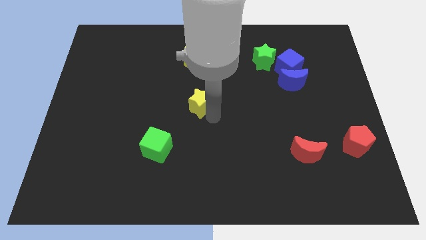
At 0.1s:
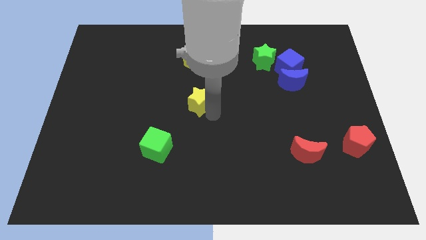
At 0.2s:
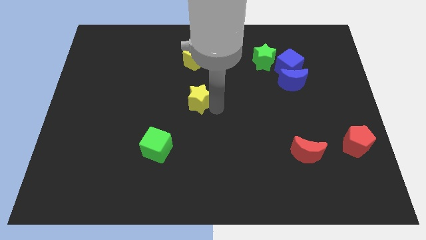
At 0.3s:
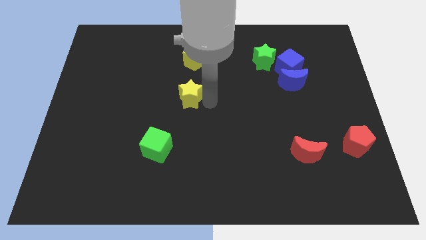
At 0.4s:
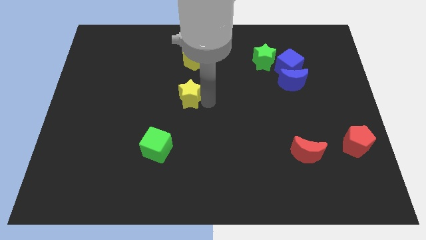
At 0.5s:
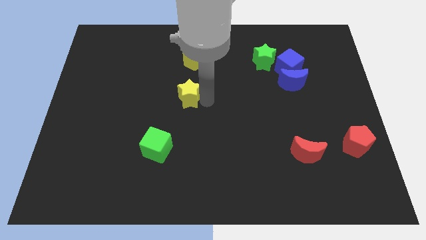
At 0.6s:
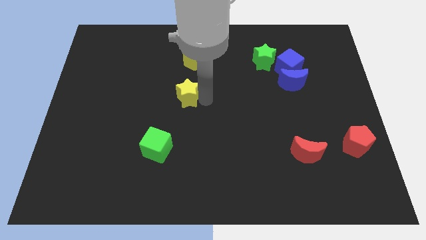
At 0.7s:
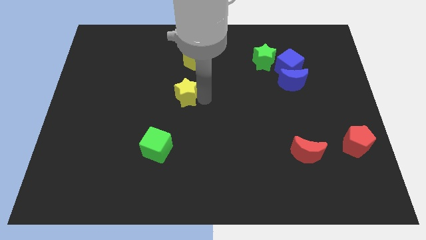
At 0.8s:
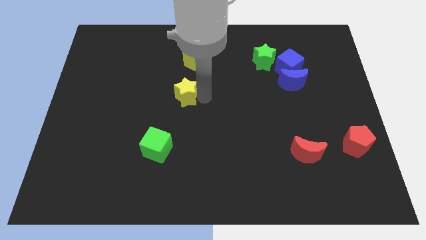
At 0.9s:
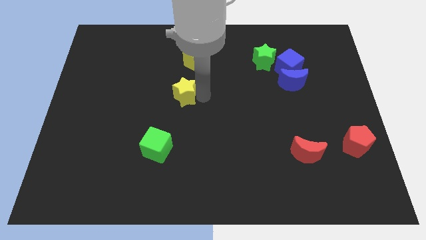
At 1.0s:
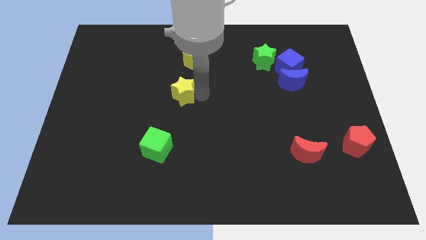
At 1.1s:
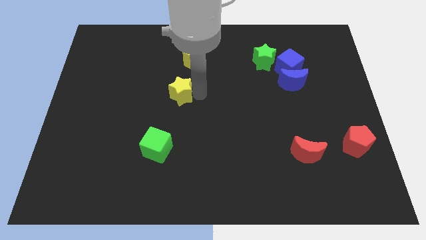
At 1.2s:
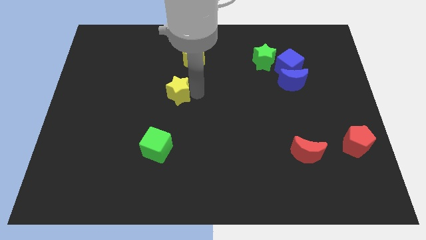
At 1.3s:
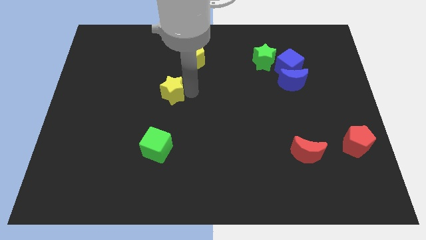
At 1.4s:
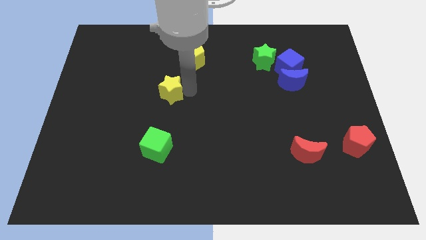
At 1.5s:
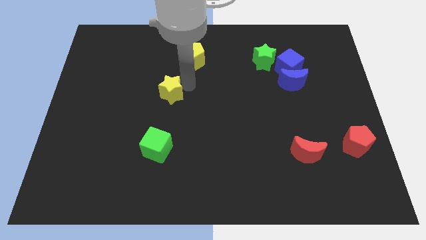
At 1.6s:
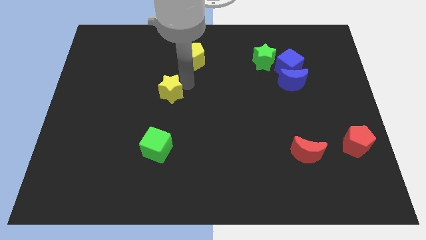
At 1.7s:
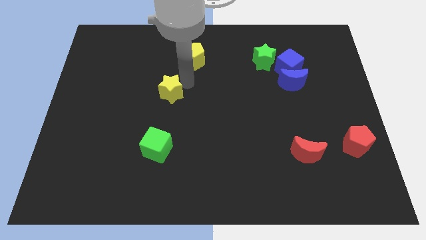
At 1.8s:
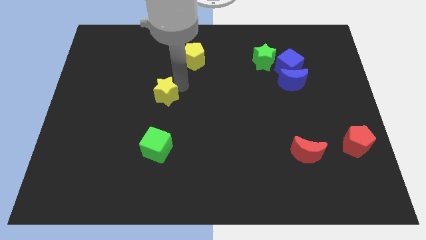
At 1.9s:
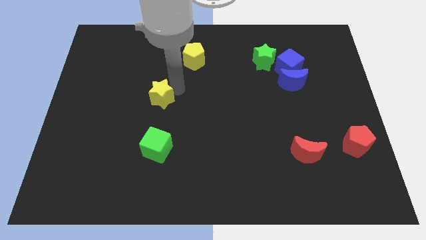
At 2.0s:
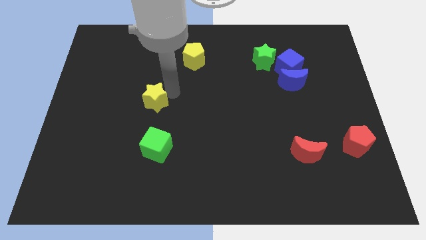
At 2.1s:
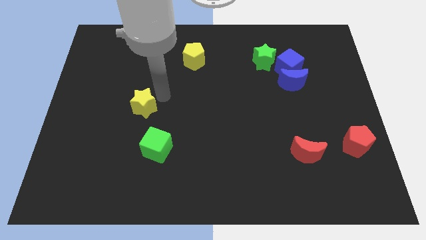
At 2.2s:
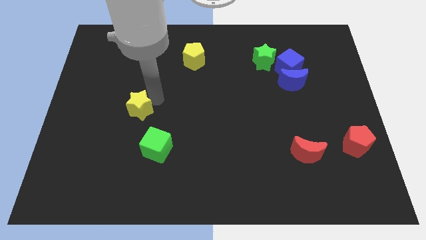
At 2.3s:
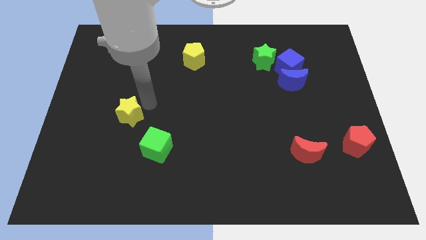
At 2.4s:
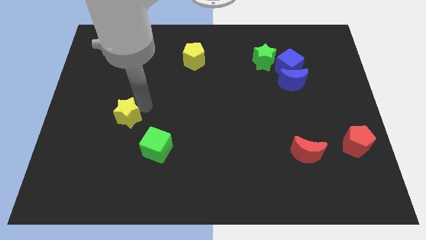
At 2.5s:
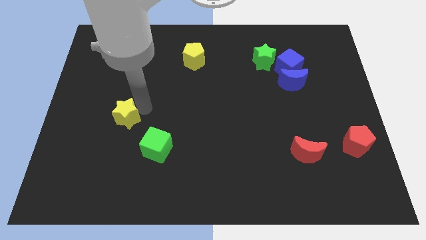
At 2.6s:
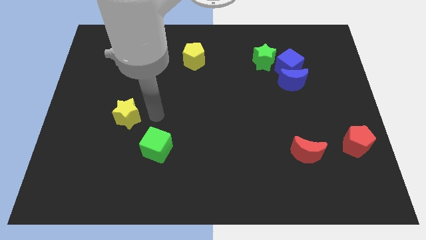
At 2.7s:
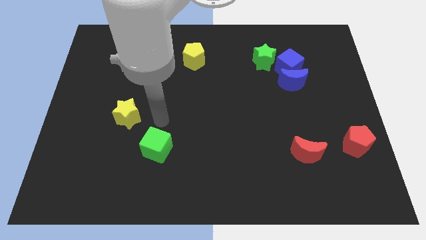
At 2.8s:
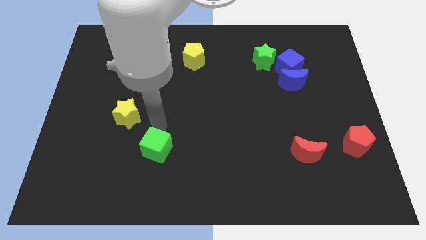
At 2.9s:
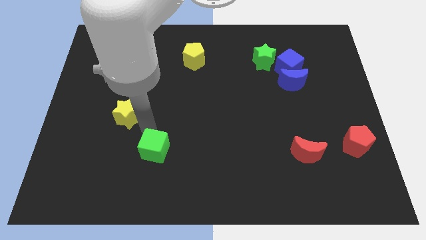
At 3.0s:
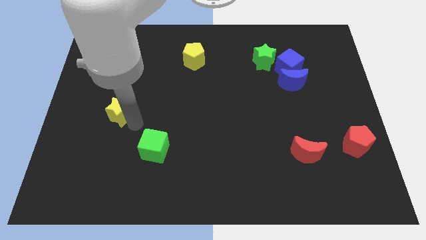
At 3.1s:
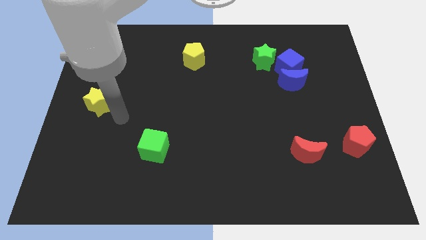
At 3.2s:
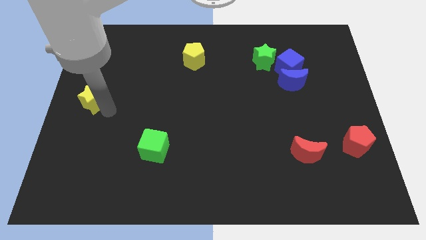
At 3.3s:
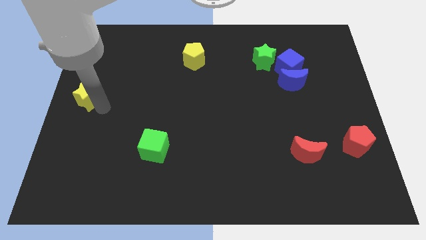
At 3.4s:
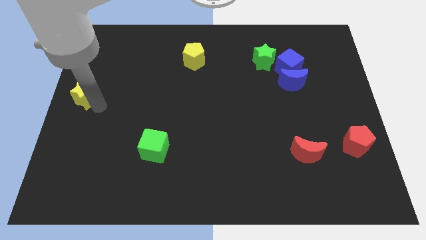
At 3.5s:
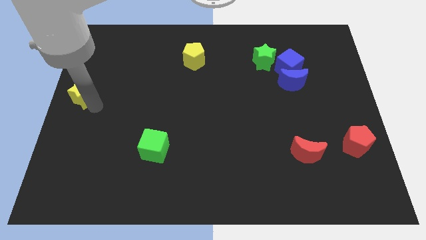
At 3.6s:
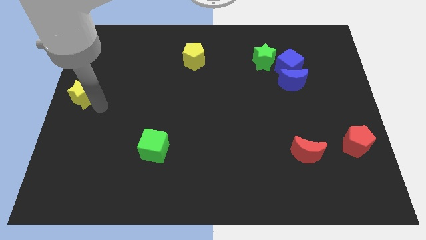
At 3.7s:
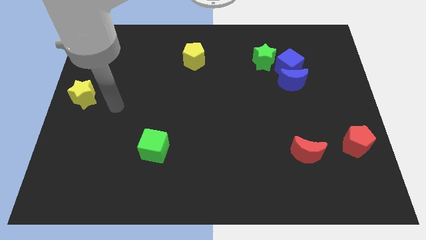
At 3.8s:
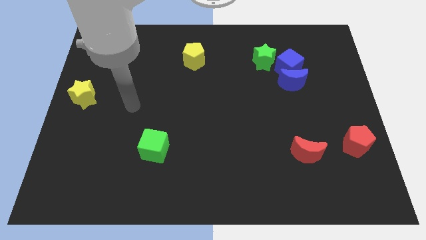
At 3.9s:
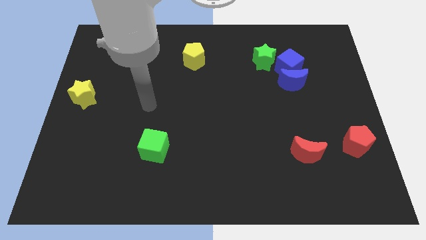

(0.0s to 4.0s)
push the yellow star to the left center of the board

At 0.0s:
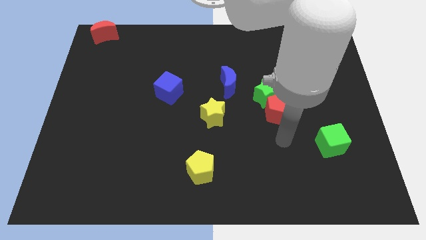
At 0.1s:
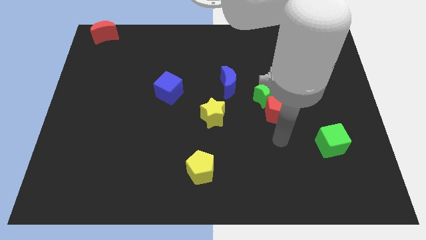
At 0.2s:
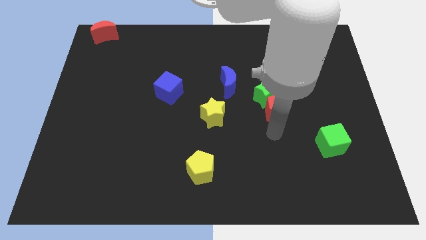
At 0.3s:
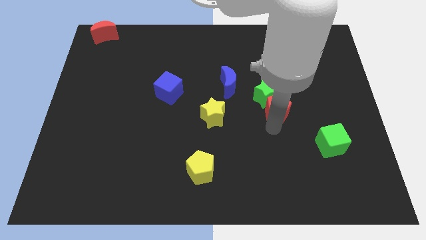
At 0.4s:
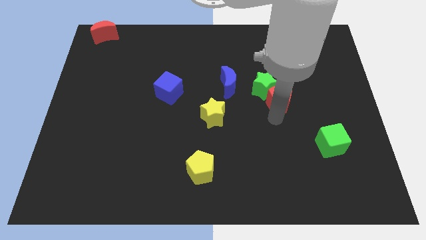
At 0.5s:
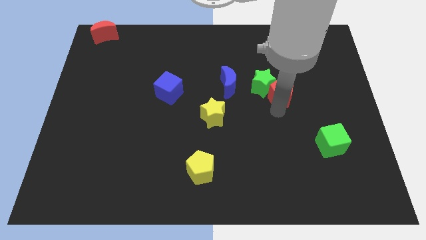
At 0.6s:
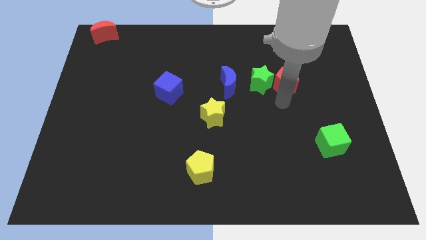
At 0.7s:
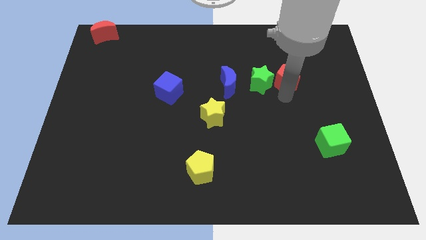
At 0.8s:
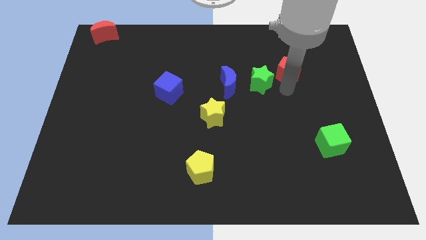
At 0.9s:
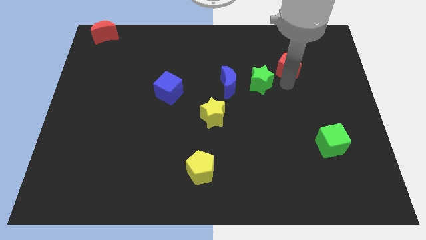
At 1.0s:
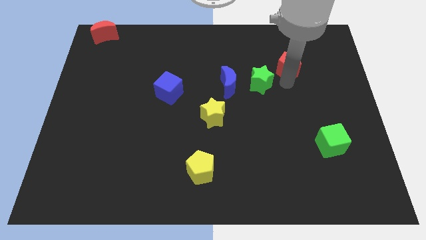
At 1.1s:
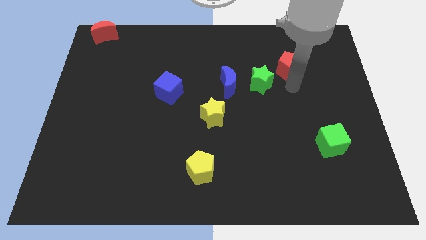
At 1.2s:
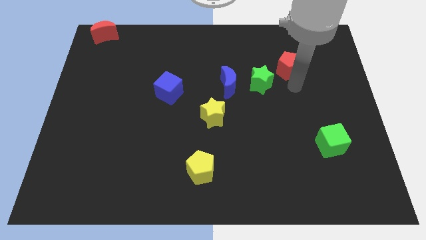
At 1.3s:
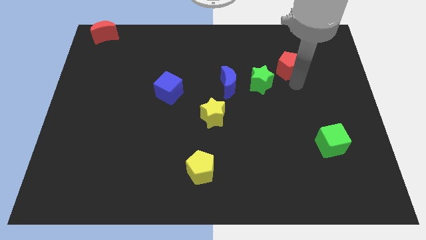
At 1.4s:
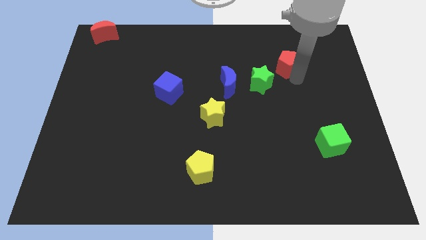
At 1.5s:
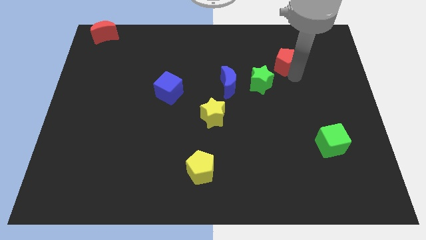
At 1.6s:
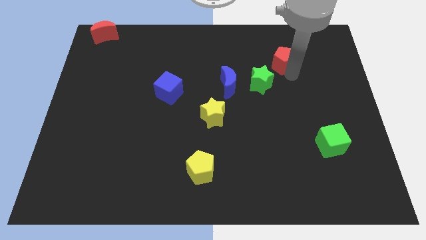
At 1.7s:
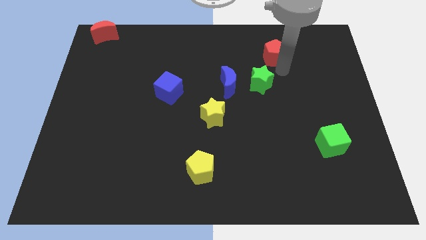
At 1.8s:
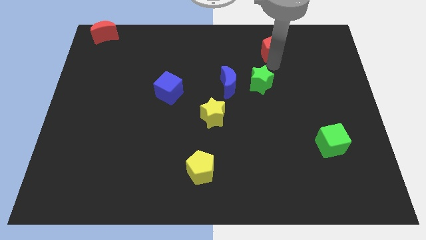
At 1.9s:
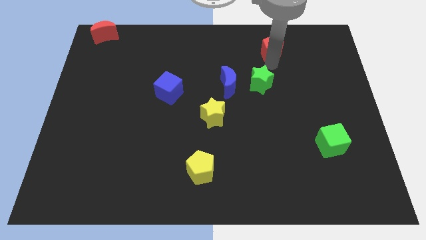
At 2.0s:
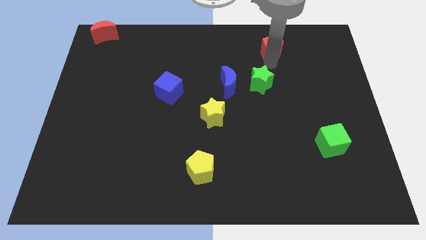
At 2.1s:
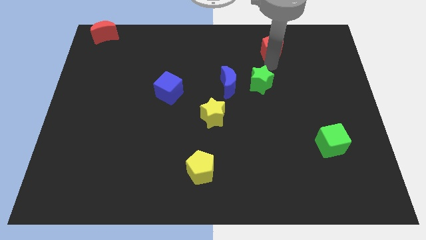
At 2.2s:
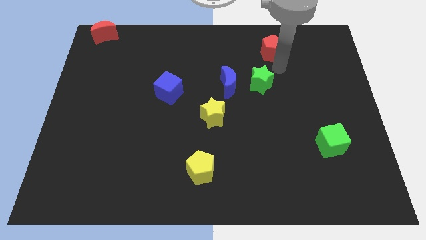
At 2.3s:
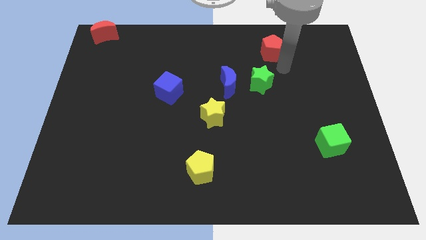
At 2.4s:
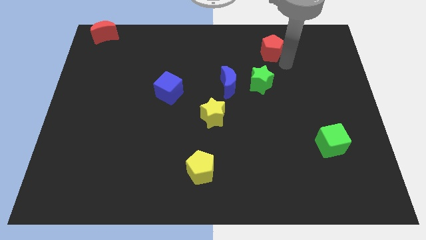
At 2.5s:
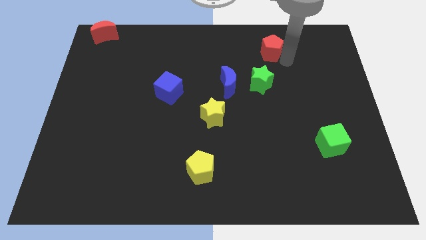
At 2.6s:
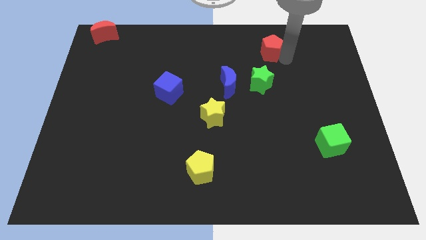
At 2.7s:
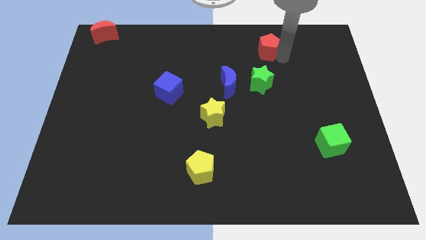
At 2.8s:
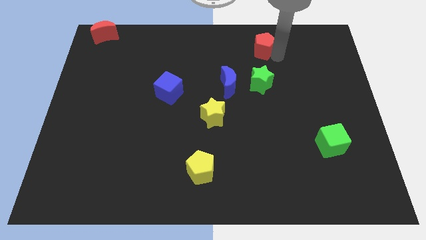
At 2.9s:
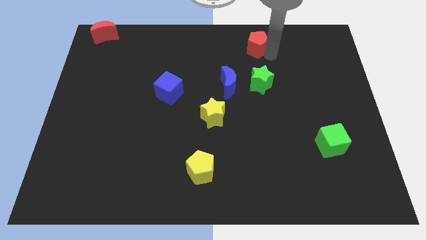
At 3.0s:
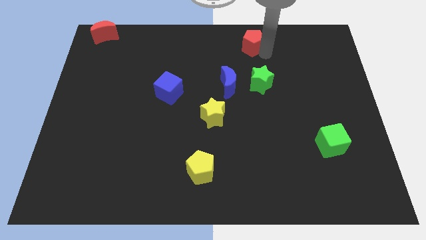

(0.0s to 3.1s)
push the red pentagon to the top of the green star

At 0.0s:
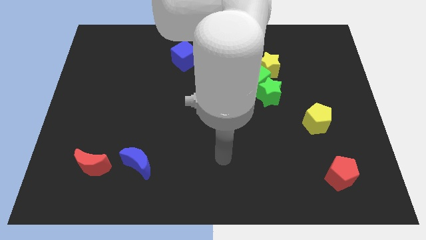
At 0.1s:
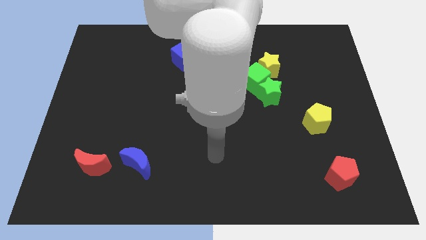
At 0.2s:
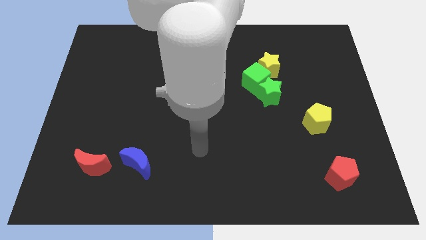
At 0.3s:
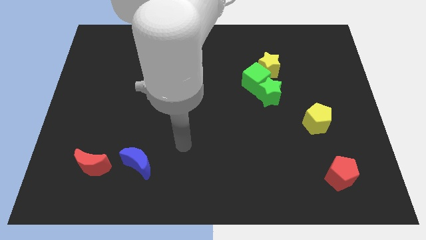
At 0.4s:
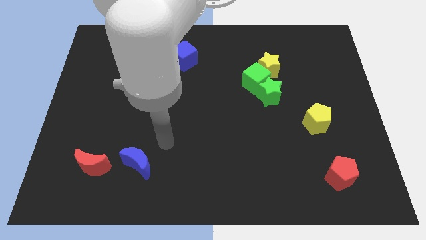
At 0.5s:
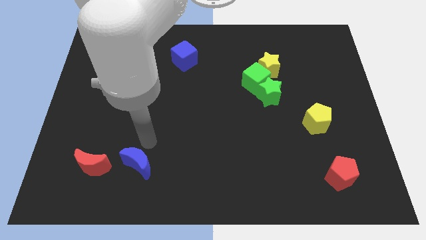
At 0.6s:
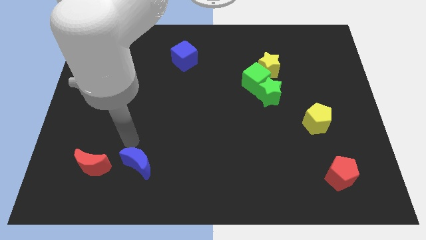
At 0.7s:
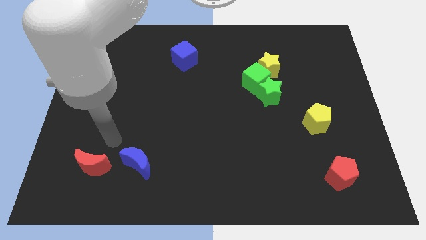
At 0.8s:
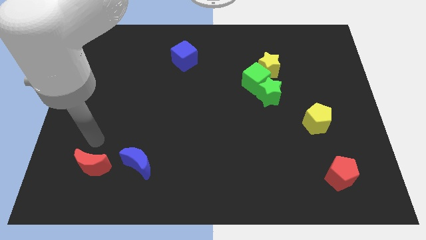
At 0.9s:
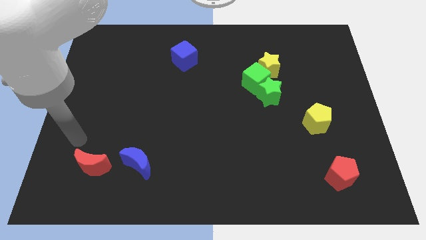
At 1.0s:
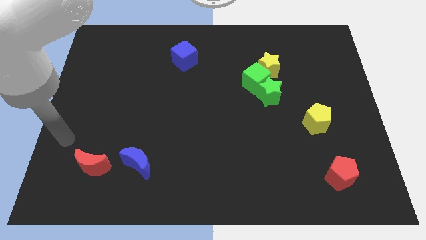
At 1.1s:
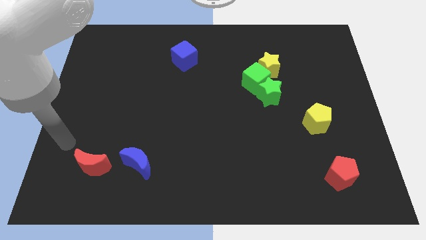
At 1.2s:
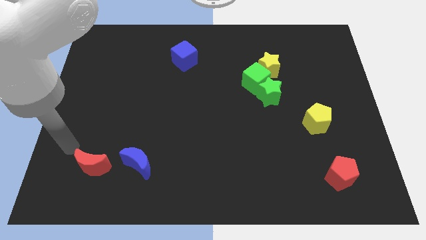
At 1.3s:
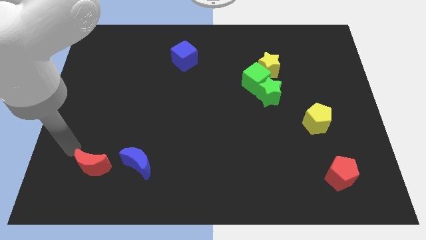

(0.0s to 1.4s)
place arm on the top left of red crescent

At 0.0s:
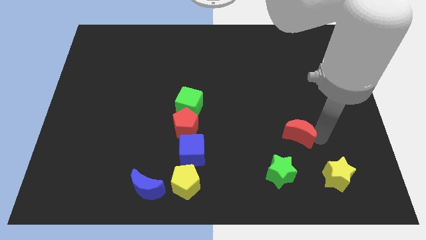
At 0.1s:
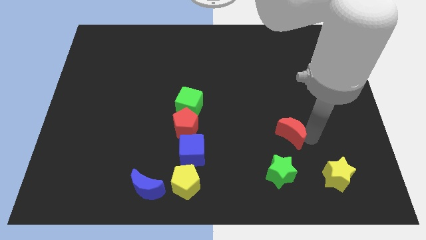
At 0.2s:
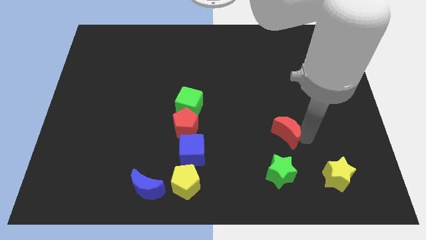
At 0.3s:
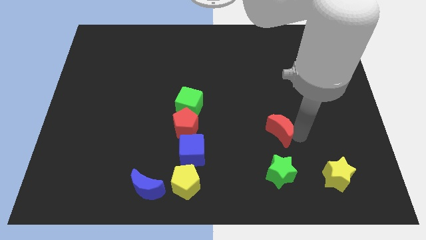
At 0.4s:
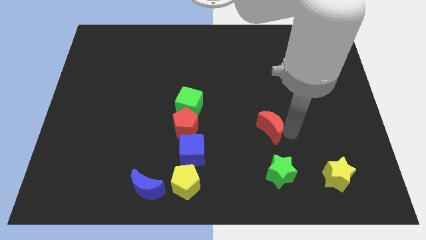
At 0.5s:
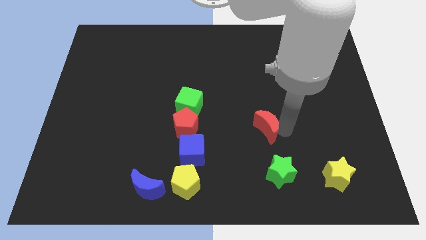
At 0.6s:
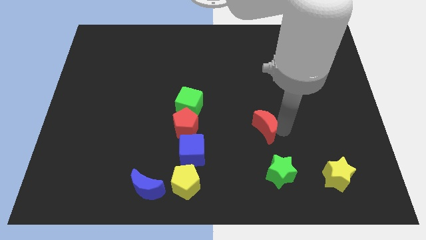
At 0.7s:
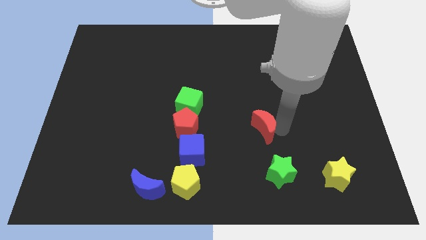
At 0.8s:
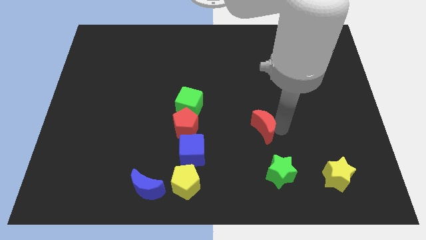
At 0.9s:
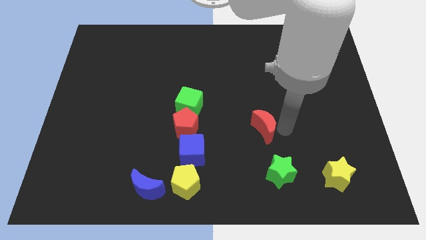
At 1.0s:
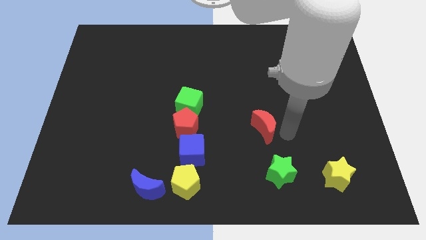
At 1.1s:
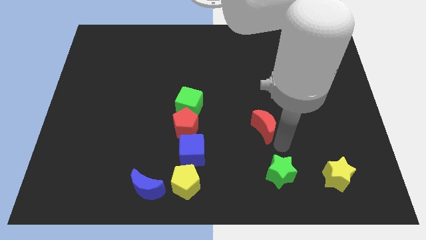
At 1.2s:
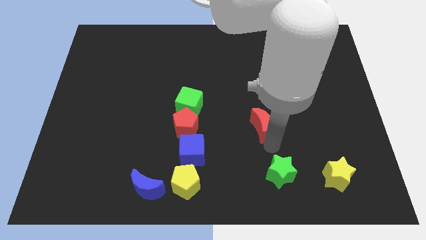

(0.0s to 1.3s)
drag red moon to the diagonally top left side of the green star
